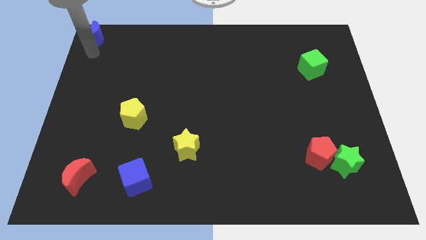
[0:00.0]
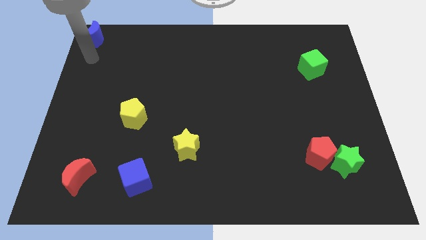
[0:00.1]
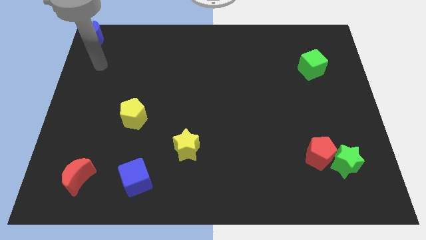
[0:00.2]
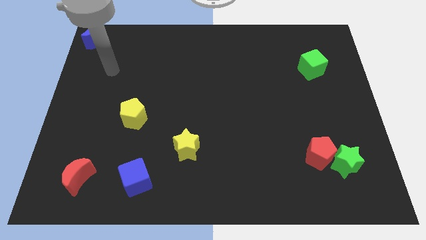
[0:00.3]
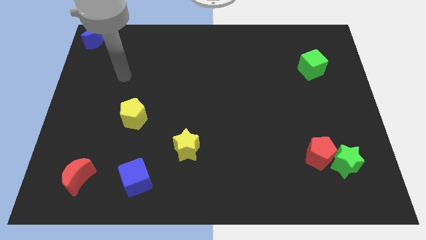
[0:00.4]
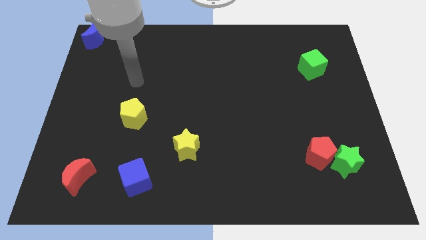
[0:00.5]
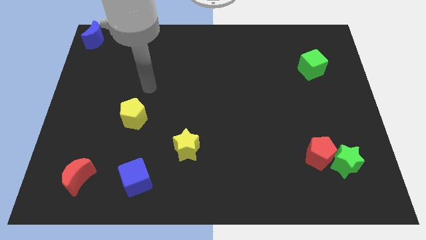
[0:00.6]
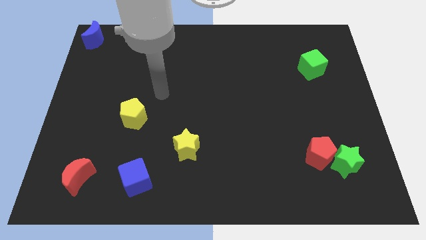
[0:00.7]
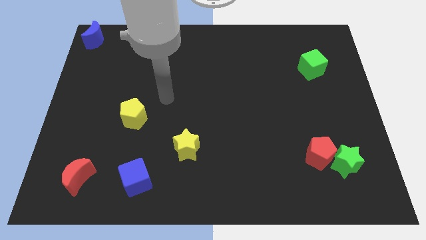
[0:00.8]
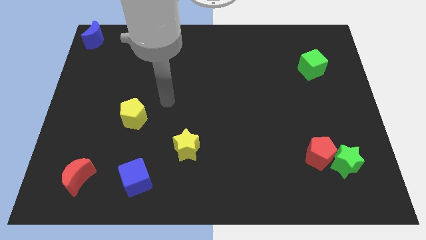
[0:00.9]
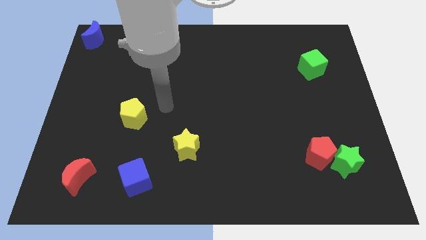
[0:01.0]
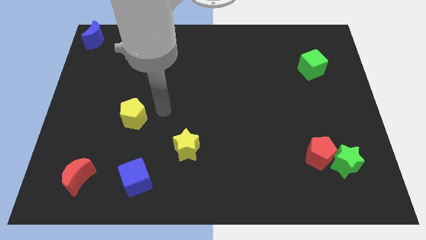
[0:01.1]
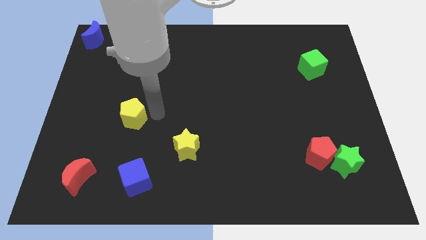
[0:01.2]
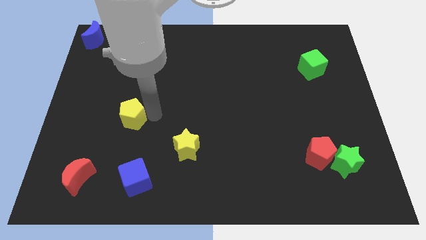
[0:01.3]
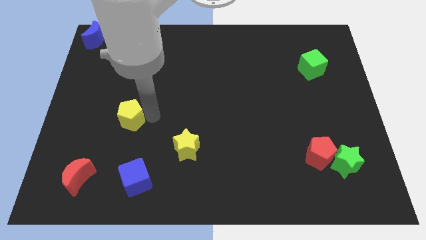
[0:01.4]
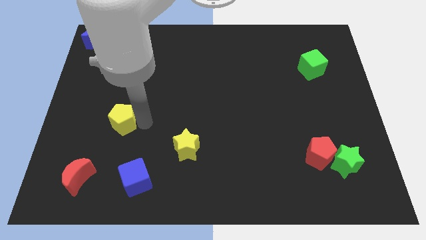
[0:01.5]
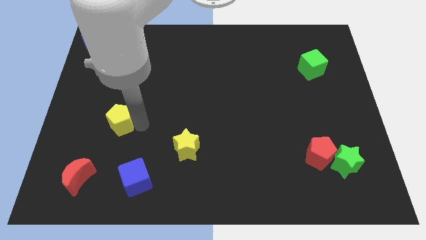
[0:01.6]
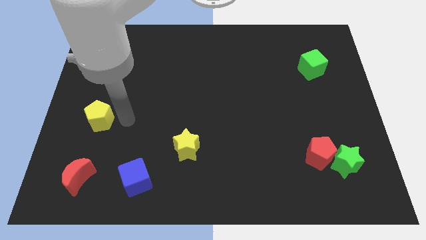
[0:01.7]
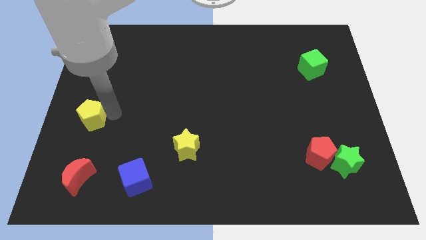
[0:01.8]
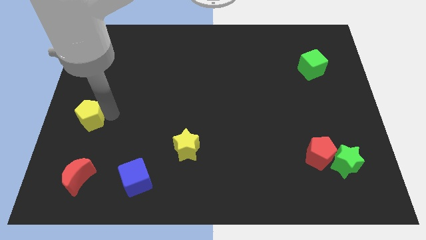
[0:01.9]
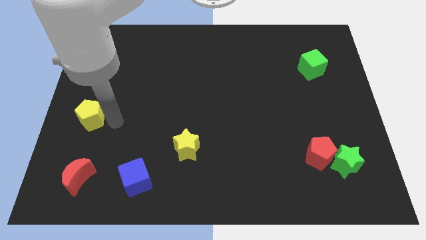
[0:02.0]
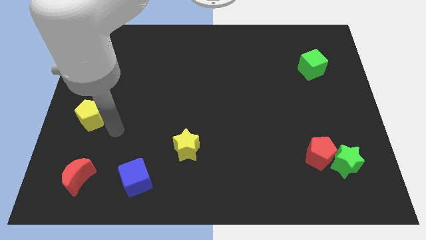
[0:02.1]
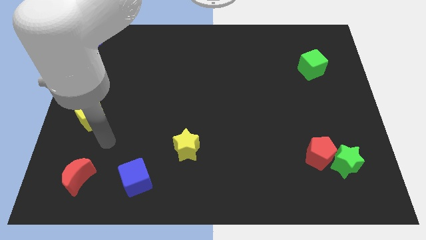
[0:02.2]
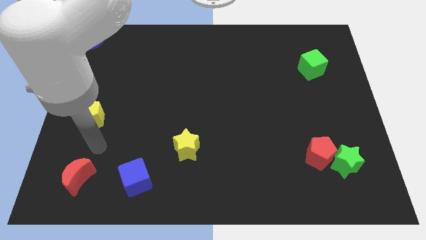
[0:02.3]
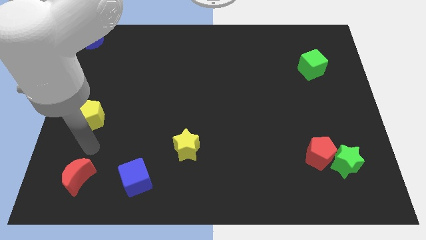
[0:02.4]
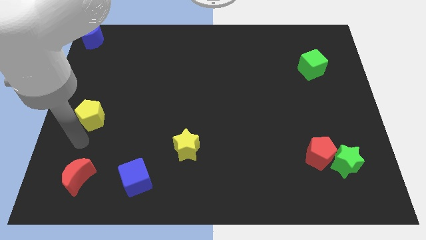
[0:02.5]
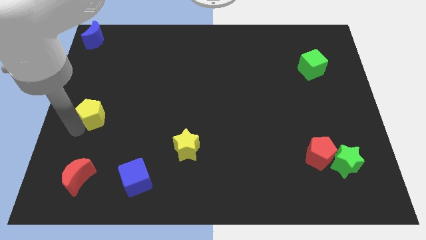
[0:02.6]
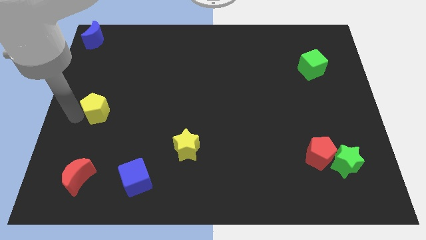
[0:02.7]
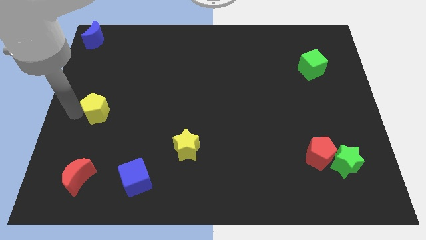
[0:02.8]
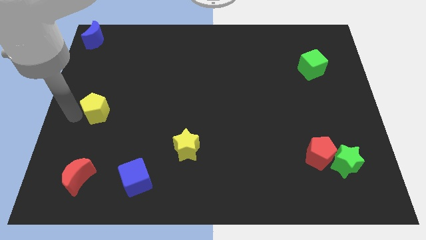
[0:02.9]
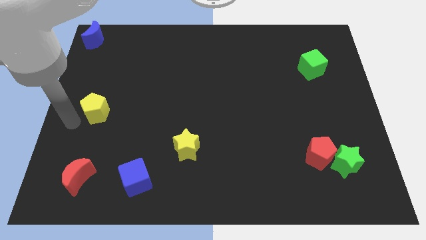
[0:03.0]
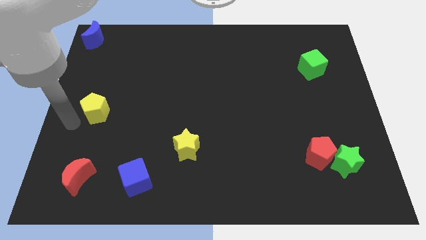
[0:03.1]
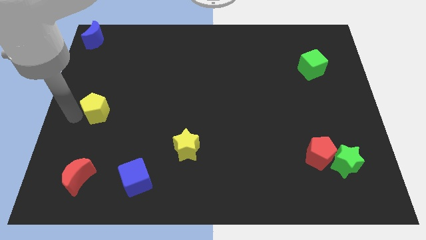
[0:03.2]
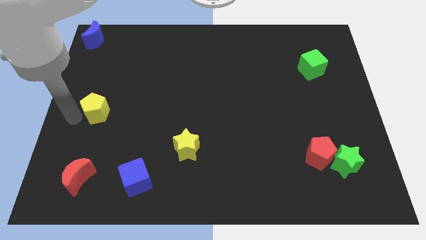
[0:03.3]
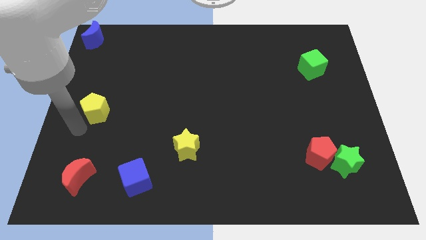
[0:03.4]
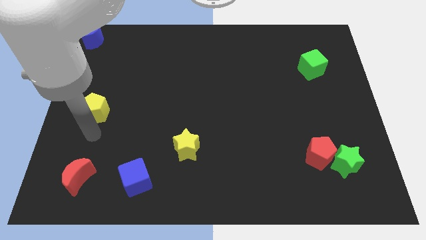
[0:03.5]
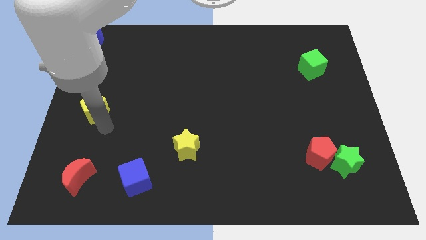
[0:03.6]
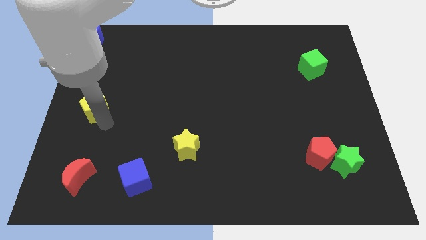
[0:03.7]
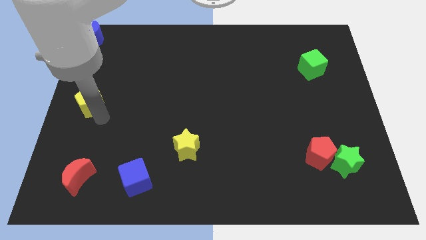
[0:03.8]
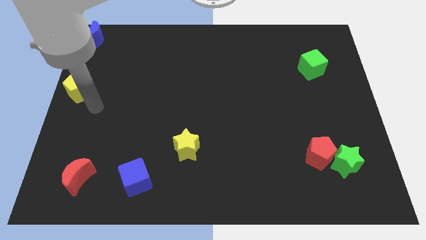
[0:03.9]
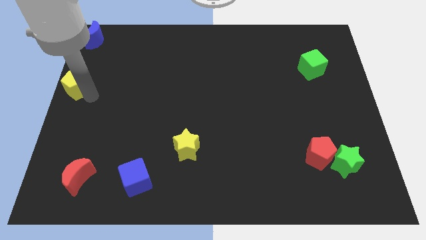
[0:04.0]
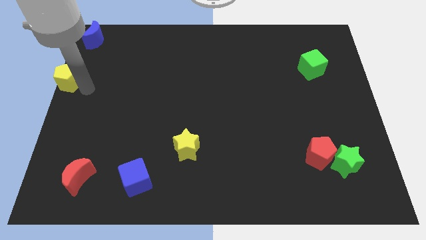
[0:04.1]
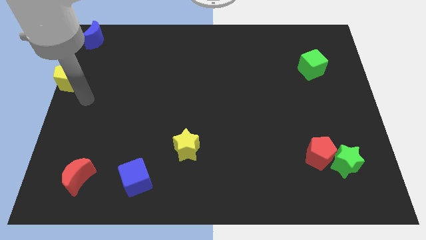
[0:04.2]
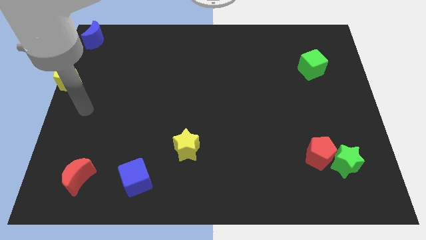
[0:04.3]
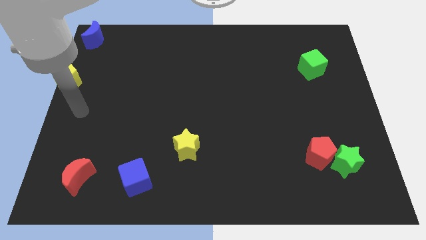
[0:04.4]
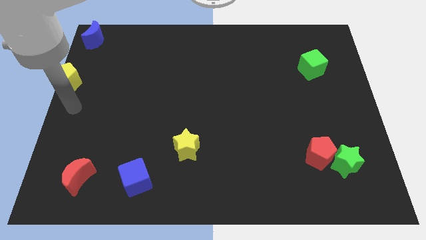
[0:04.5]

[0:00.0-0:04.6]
drag yellow pentagon towards middle left of the board

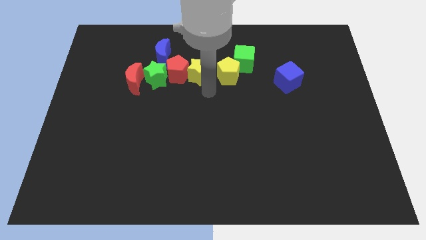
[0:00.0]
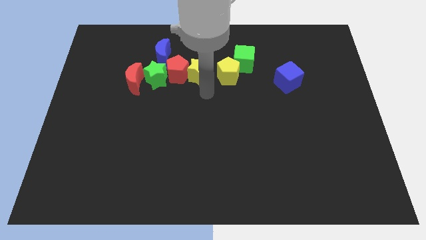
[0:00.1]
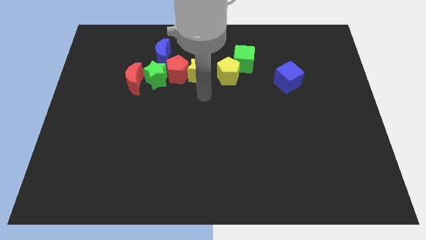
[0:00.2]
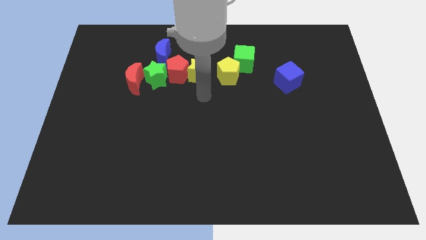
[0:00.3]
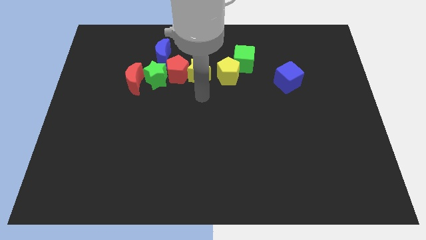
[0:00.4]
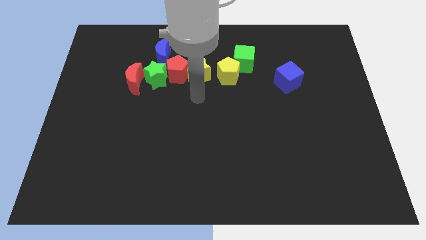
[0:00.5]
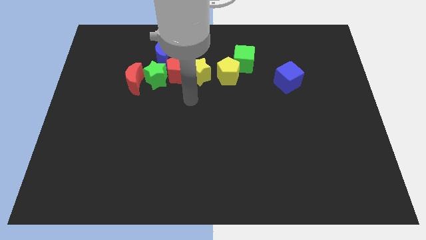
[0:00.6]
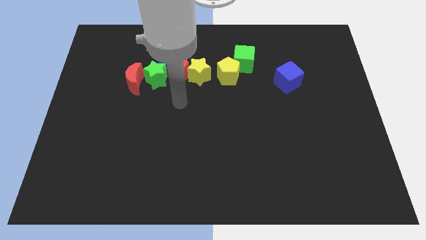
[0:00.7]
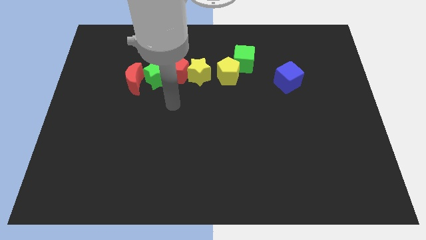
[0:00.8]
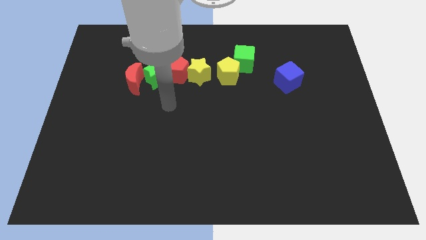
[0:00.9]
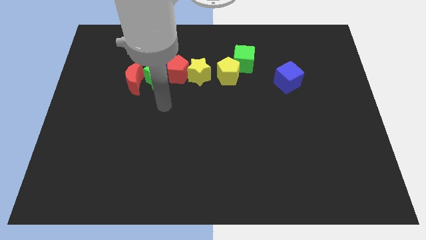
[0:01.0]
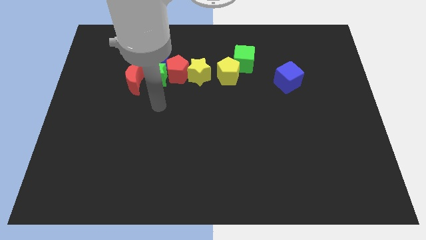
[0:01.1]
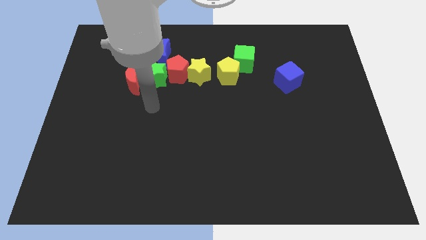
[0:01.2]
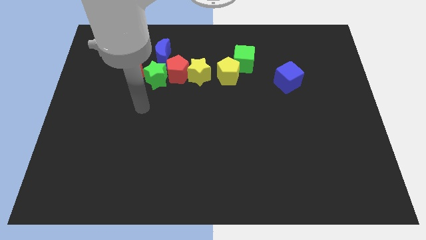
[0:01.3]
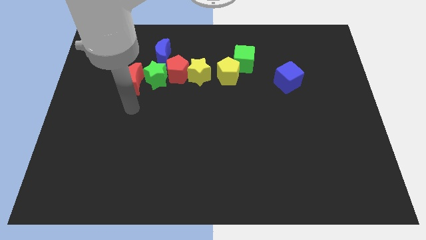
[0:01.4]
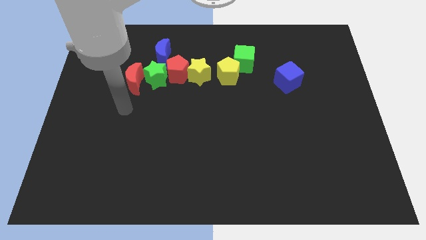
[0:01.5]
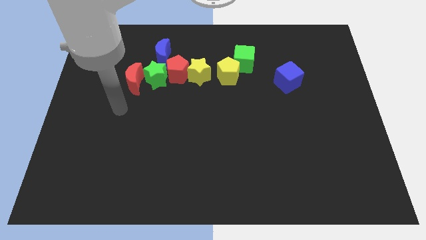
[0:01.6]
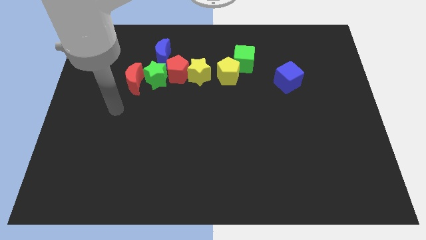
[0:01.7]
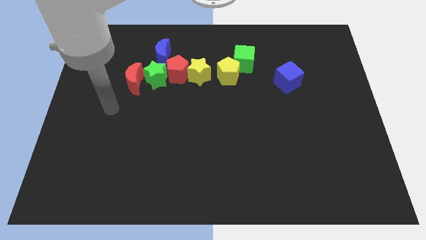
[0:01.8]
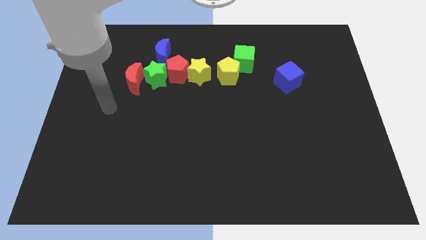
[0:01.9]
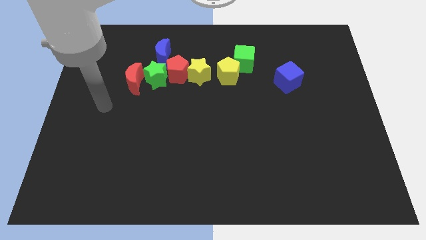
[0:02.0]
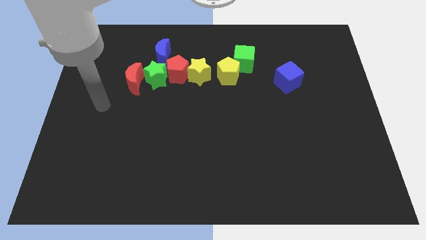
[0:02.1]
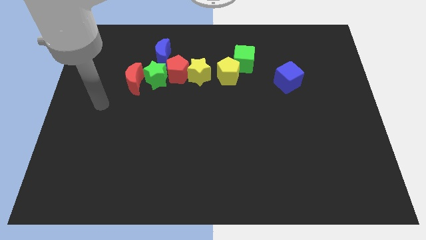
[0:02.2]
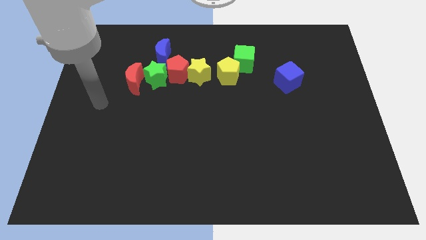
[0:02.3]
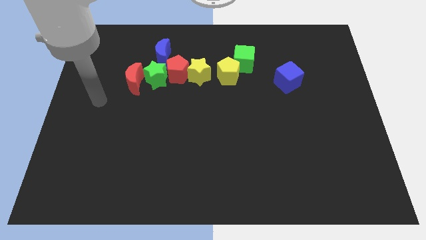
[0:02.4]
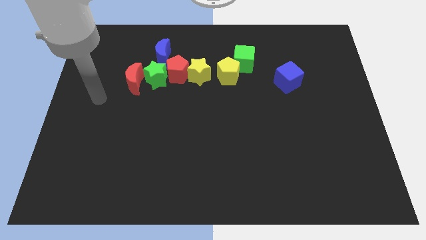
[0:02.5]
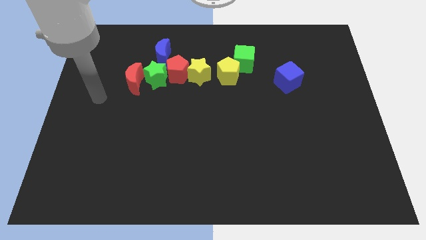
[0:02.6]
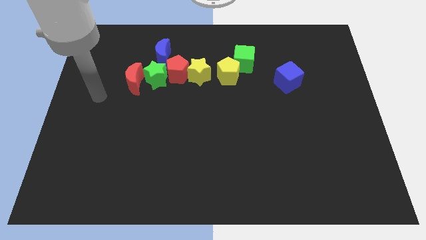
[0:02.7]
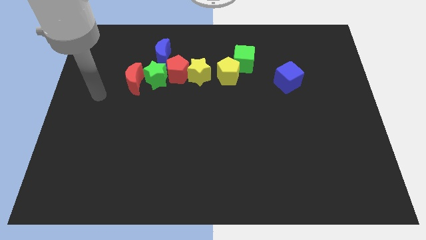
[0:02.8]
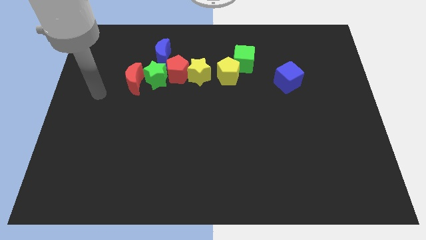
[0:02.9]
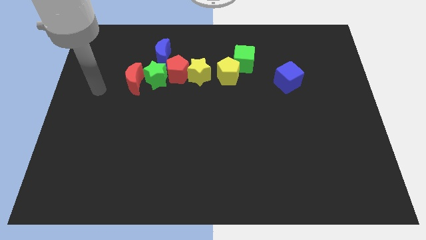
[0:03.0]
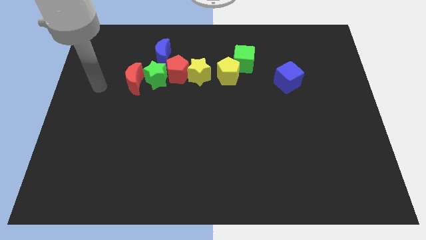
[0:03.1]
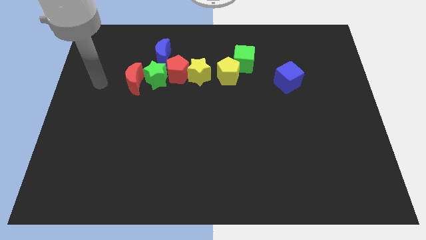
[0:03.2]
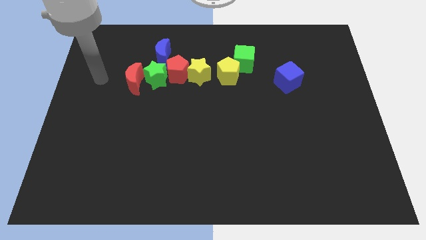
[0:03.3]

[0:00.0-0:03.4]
move your arm towards the red crescent

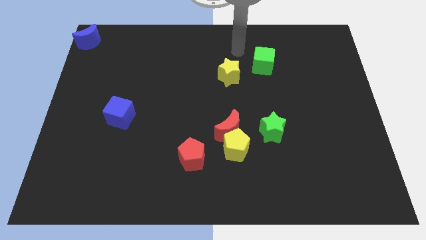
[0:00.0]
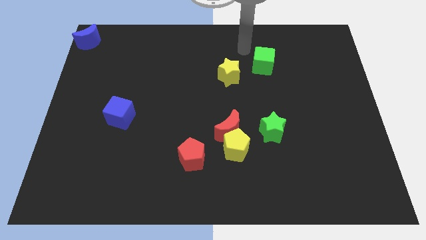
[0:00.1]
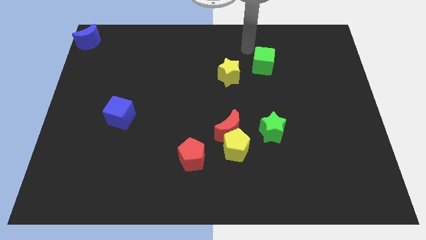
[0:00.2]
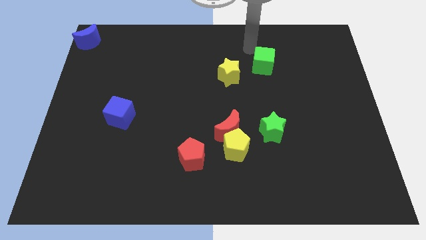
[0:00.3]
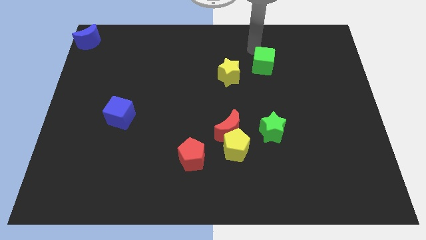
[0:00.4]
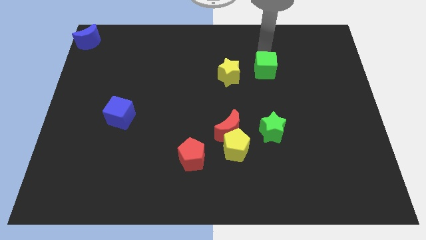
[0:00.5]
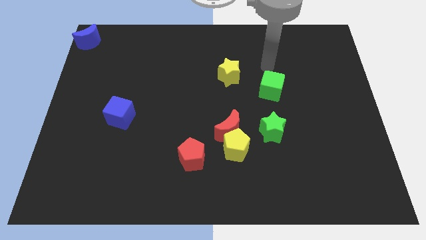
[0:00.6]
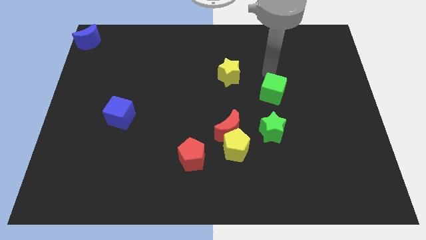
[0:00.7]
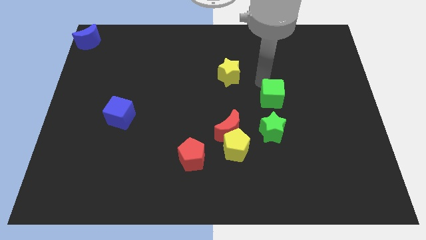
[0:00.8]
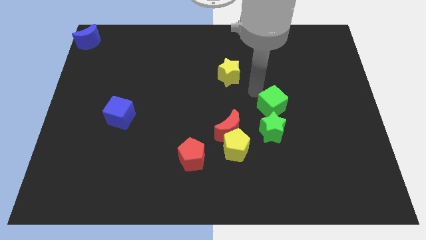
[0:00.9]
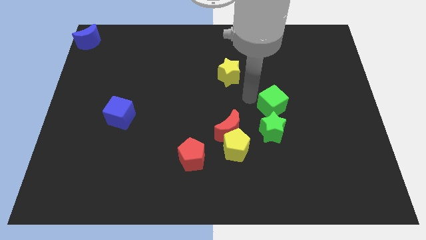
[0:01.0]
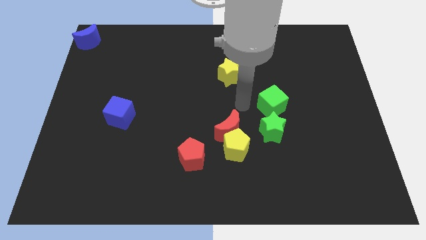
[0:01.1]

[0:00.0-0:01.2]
move the green cube close to the top side of the green star
